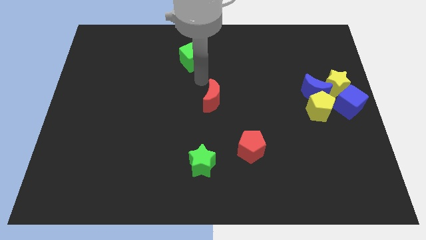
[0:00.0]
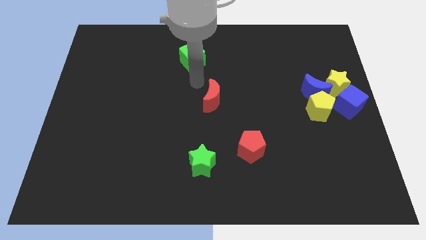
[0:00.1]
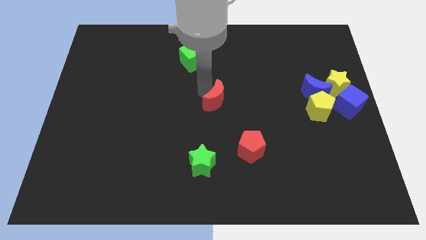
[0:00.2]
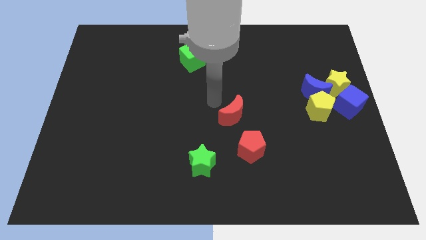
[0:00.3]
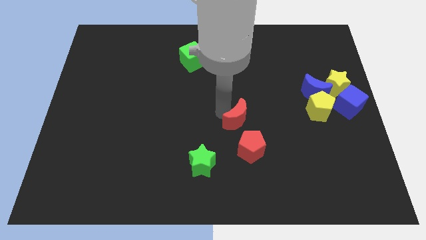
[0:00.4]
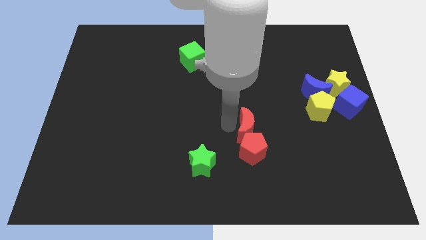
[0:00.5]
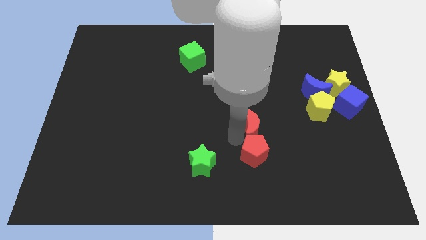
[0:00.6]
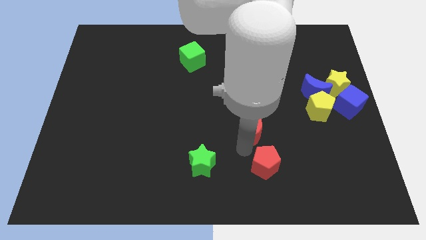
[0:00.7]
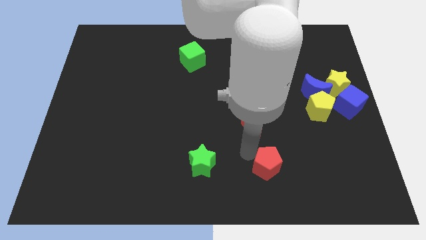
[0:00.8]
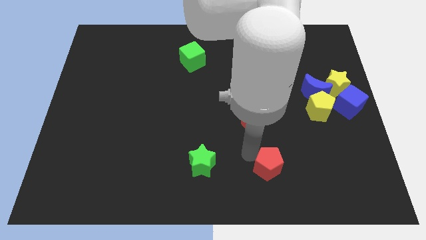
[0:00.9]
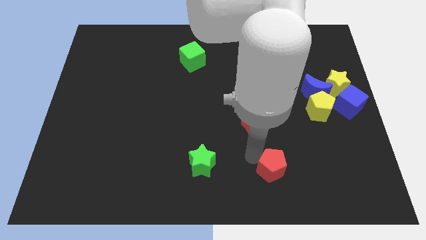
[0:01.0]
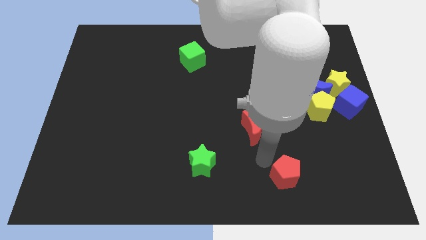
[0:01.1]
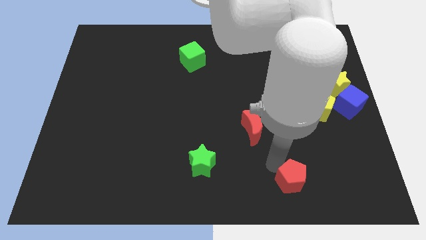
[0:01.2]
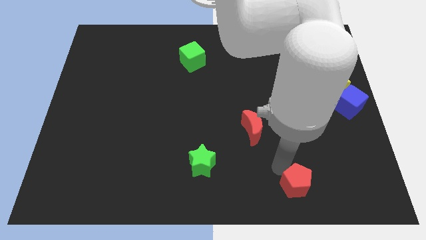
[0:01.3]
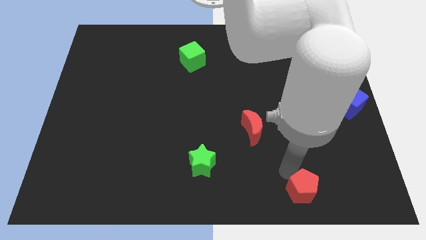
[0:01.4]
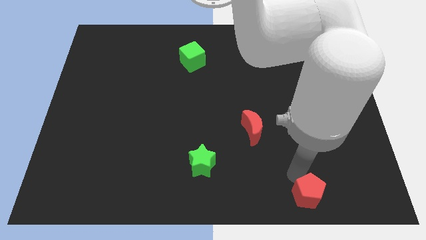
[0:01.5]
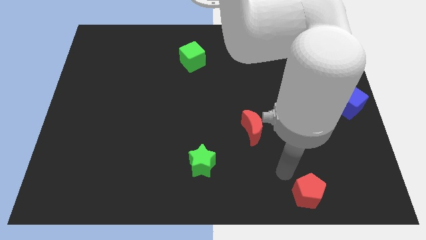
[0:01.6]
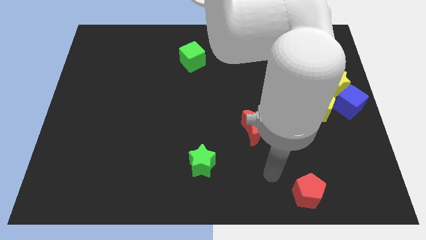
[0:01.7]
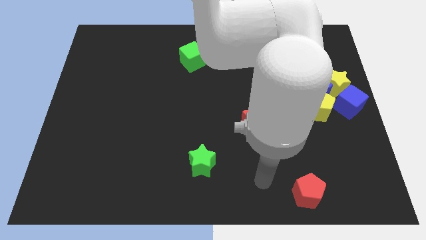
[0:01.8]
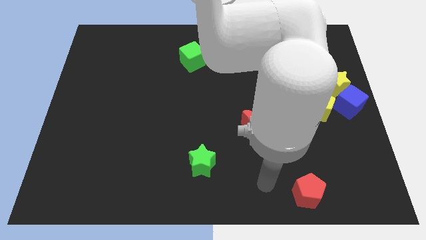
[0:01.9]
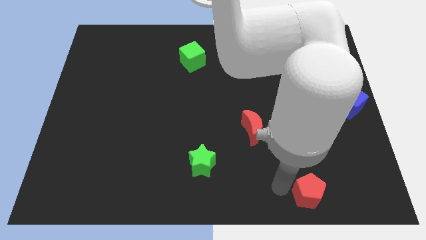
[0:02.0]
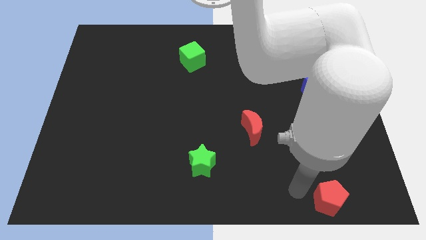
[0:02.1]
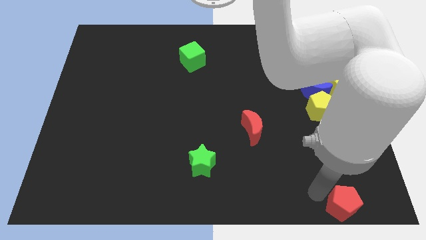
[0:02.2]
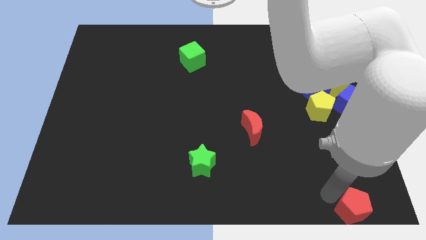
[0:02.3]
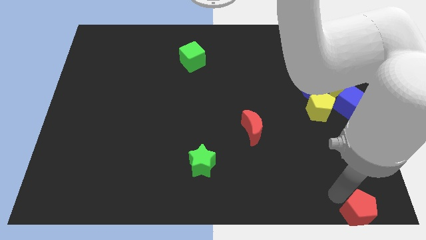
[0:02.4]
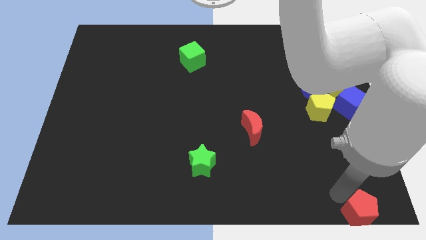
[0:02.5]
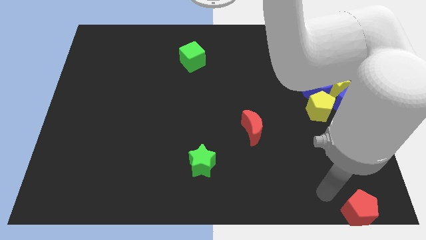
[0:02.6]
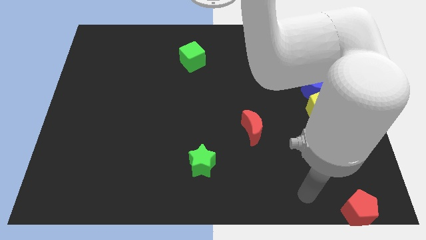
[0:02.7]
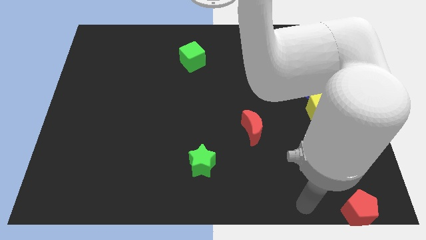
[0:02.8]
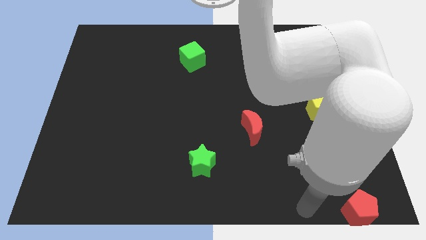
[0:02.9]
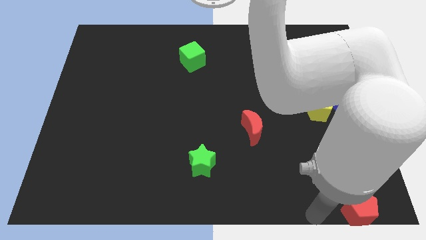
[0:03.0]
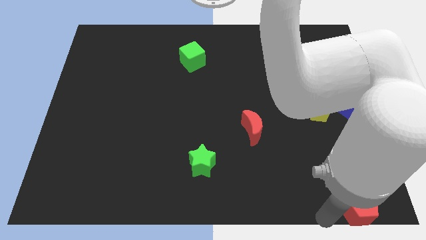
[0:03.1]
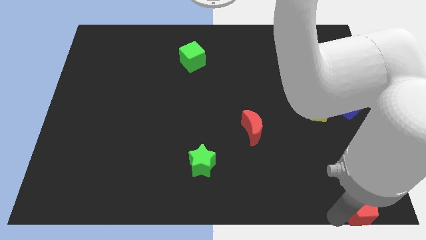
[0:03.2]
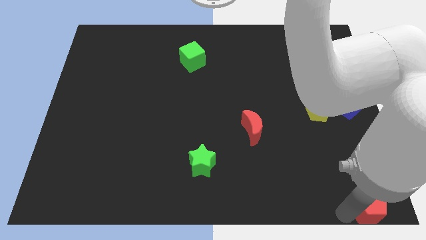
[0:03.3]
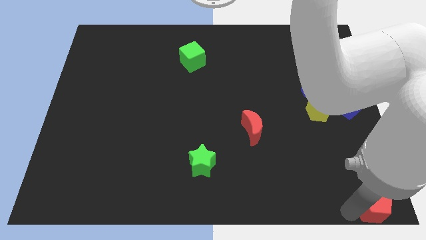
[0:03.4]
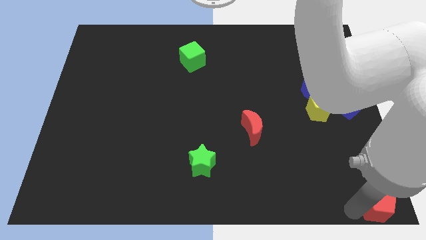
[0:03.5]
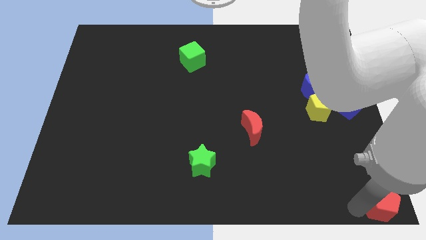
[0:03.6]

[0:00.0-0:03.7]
place the red pentagon towards the bottom right corner

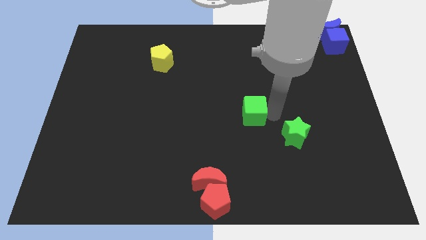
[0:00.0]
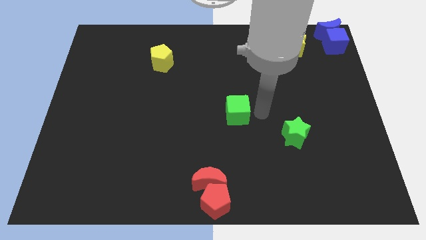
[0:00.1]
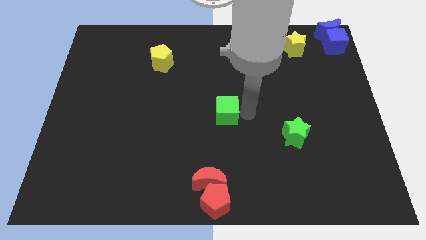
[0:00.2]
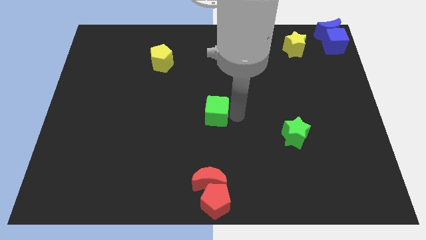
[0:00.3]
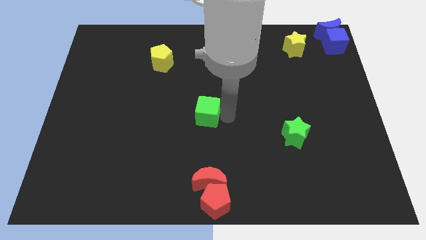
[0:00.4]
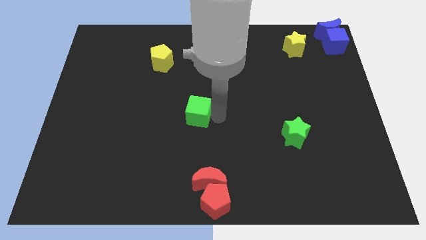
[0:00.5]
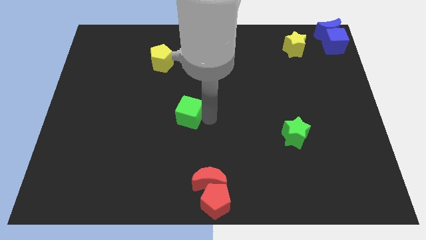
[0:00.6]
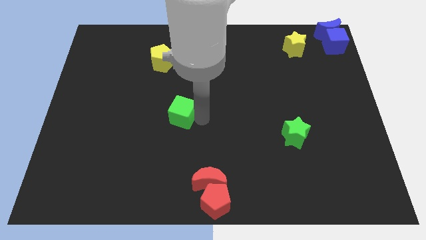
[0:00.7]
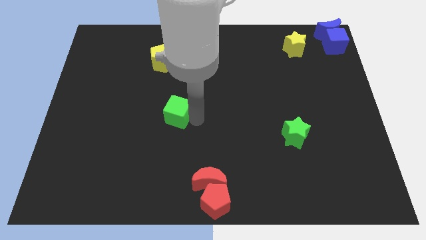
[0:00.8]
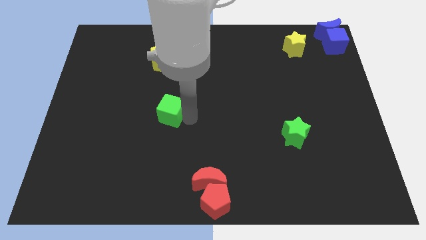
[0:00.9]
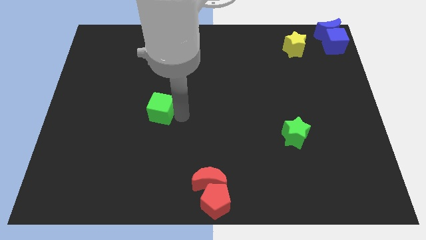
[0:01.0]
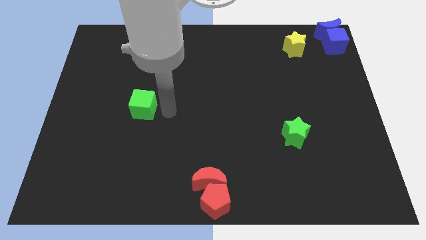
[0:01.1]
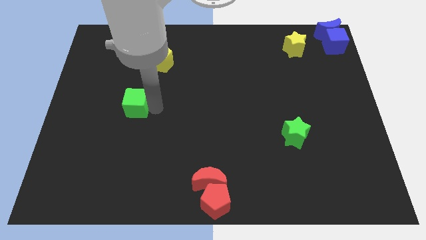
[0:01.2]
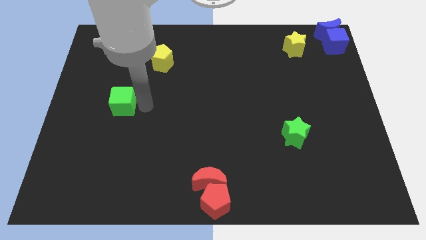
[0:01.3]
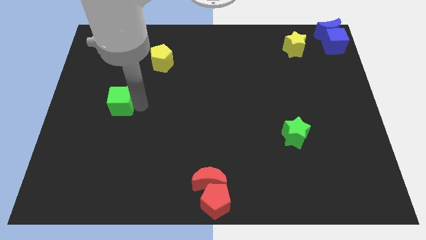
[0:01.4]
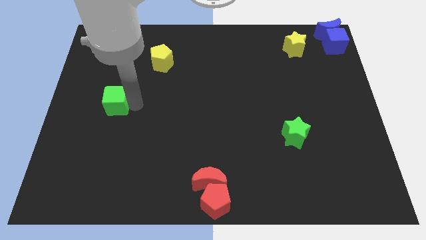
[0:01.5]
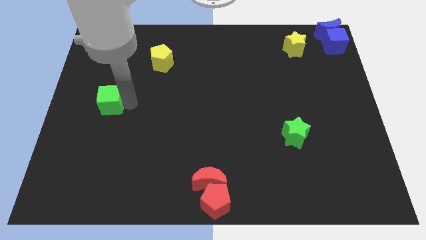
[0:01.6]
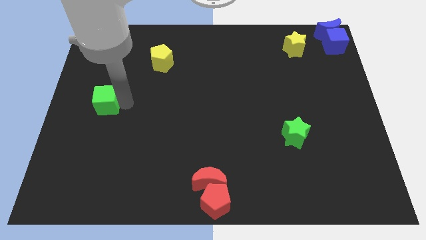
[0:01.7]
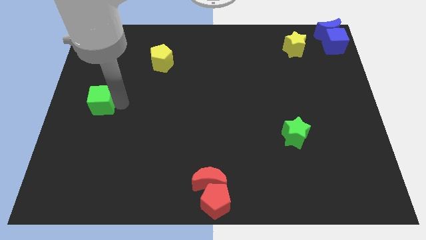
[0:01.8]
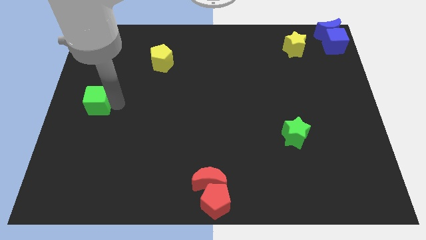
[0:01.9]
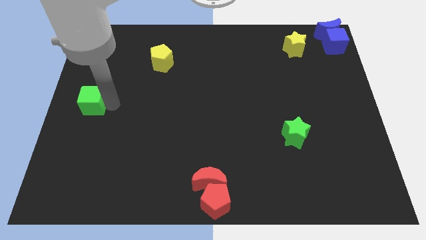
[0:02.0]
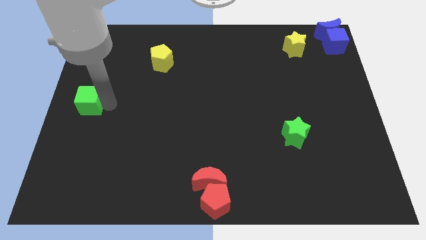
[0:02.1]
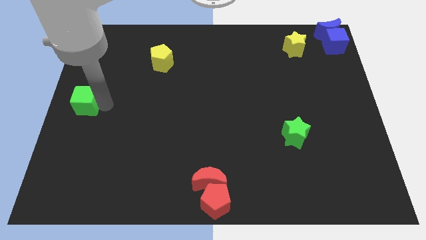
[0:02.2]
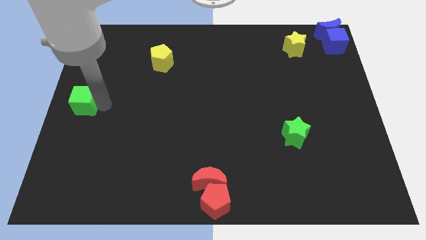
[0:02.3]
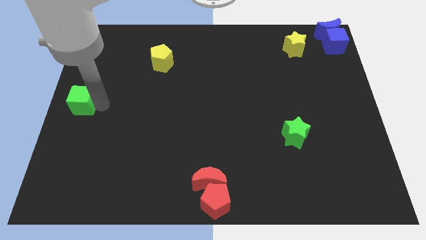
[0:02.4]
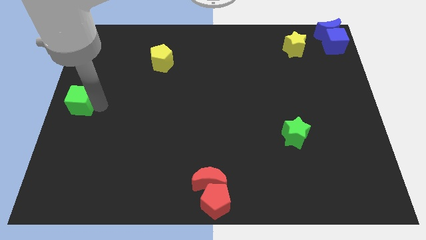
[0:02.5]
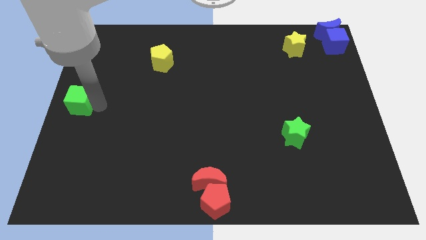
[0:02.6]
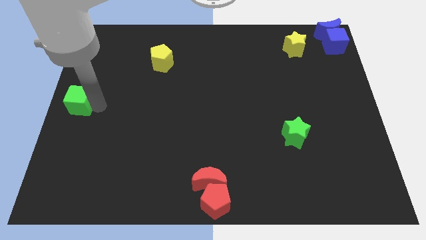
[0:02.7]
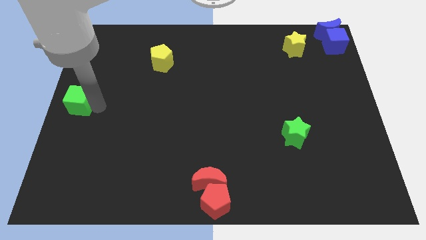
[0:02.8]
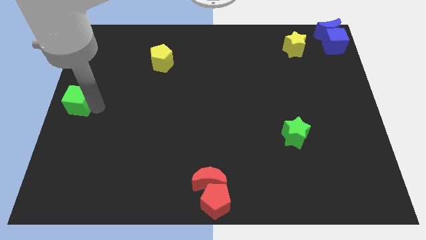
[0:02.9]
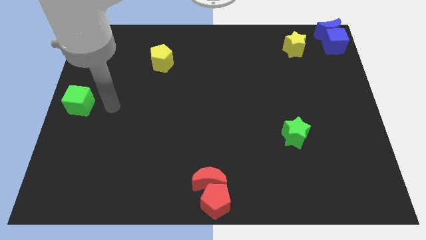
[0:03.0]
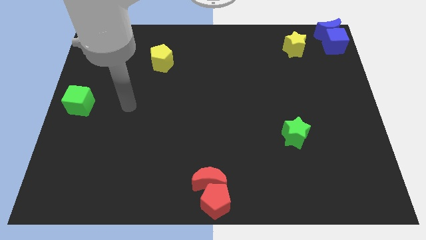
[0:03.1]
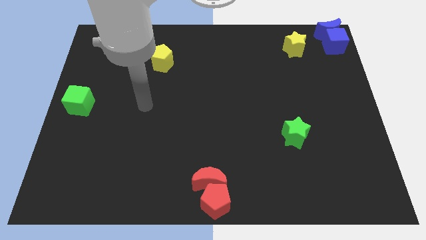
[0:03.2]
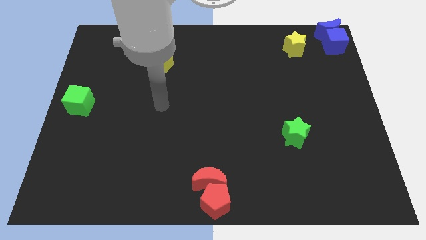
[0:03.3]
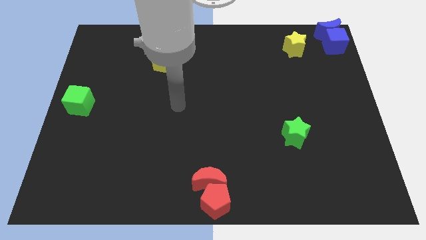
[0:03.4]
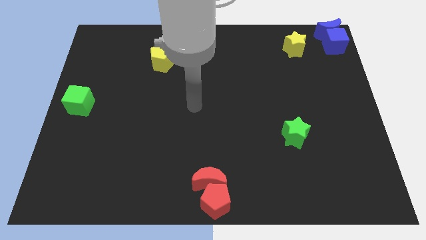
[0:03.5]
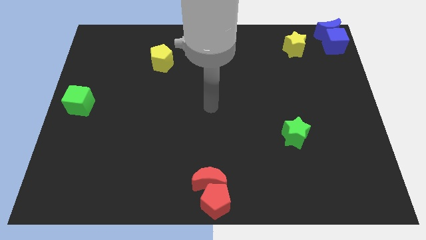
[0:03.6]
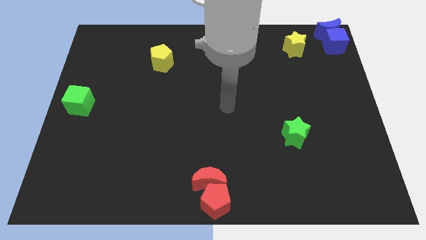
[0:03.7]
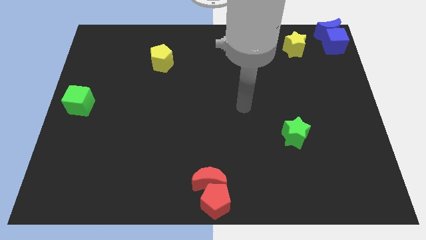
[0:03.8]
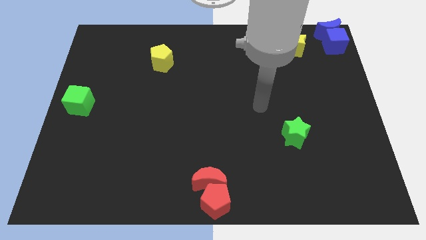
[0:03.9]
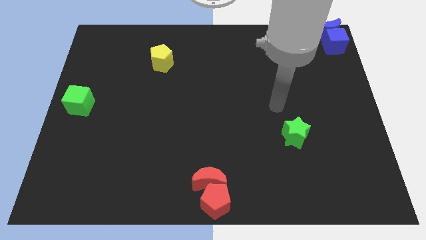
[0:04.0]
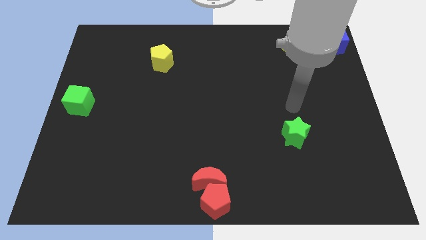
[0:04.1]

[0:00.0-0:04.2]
move the green cube to the left center of the board

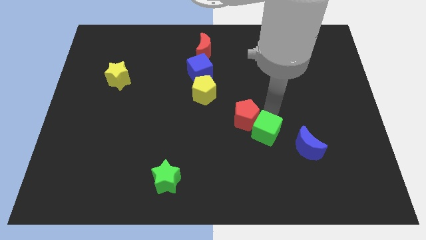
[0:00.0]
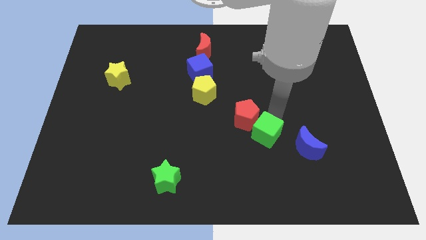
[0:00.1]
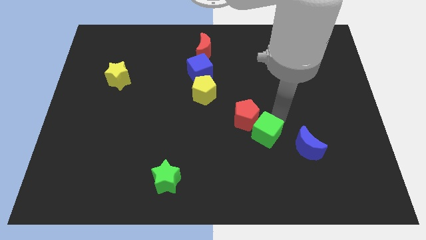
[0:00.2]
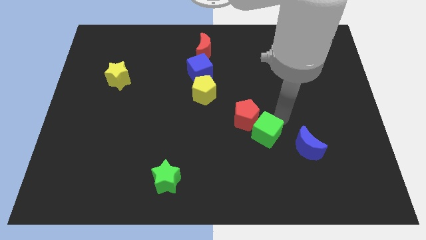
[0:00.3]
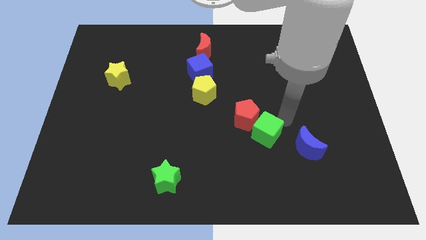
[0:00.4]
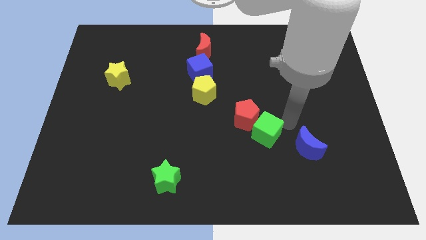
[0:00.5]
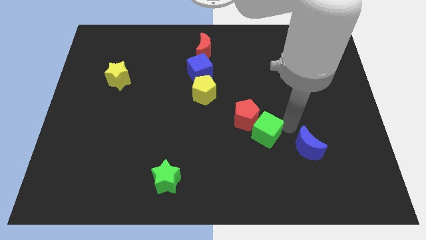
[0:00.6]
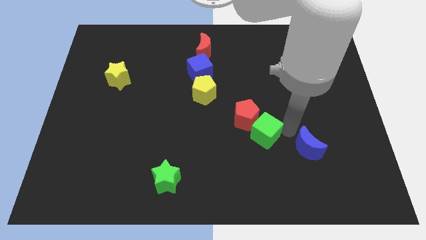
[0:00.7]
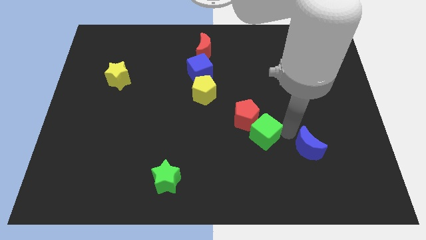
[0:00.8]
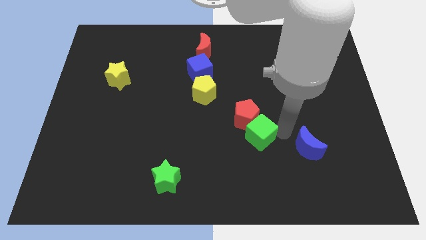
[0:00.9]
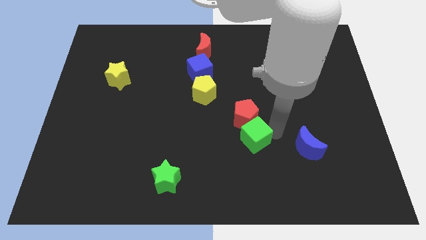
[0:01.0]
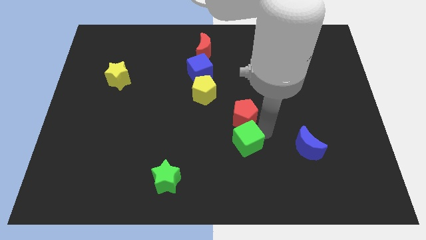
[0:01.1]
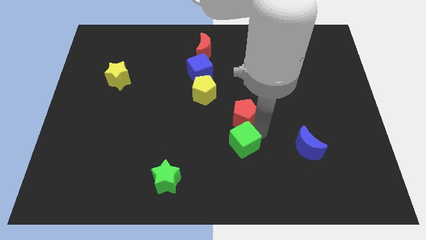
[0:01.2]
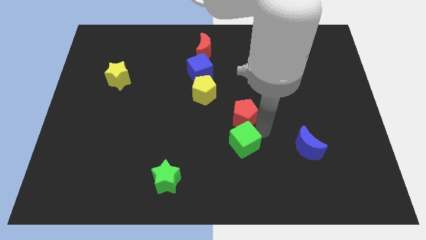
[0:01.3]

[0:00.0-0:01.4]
put the green cube to the bottom side of the red pentagon
